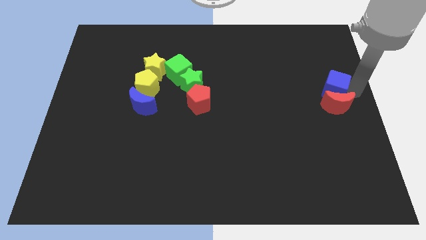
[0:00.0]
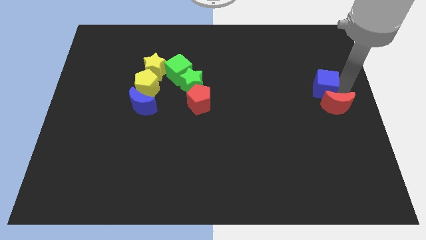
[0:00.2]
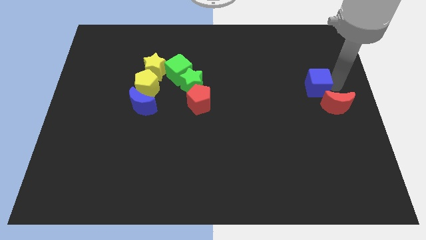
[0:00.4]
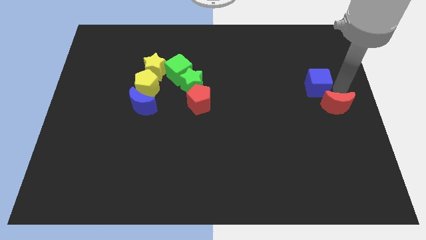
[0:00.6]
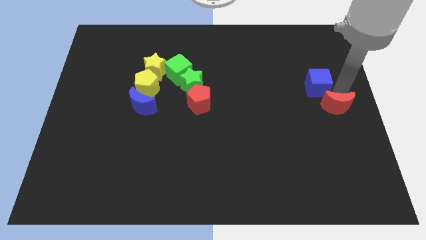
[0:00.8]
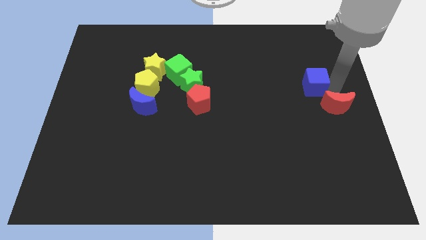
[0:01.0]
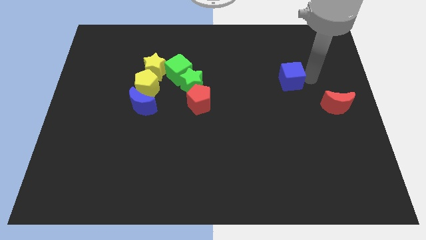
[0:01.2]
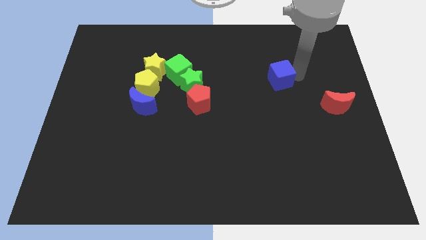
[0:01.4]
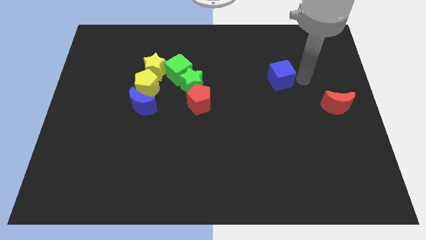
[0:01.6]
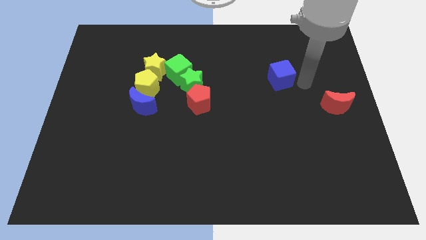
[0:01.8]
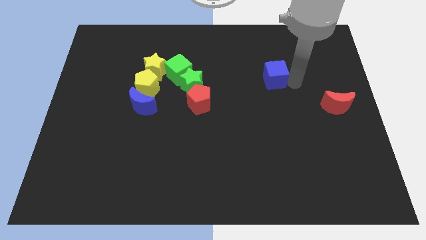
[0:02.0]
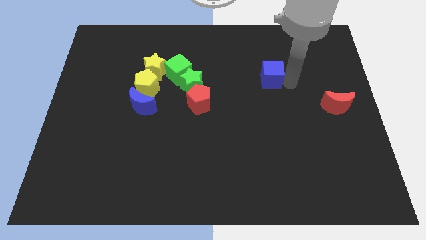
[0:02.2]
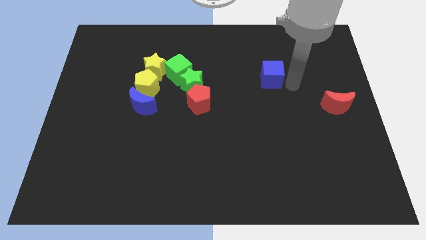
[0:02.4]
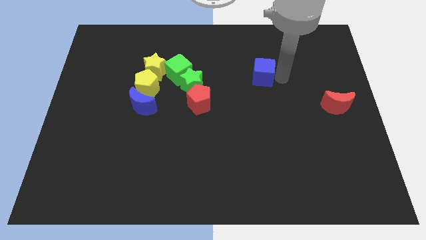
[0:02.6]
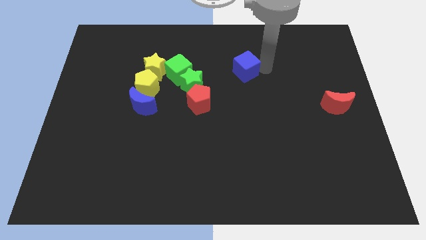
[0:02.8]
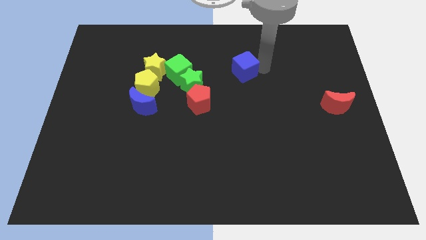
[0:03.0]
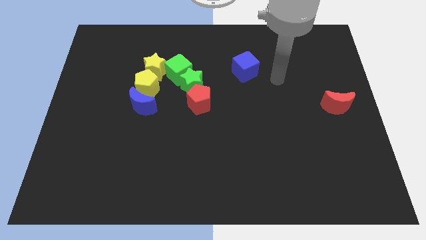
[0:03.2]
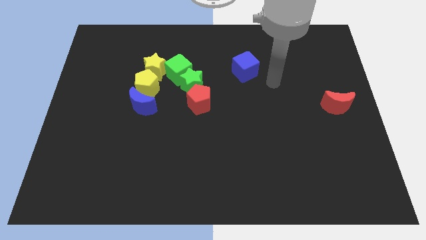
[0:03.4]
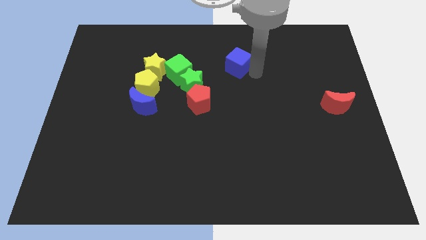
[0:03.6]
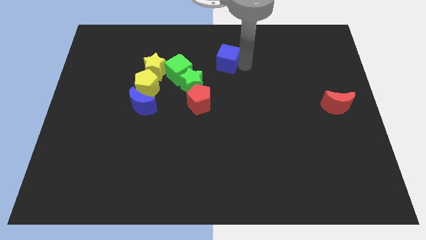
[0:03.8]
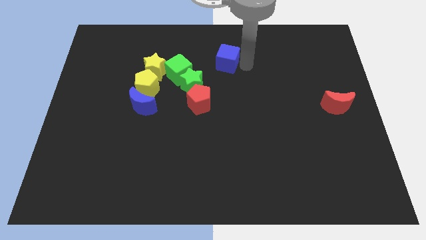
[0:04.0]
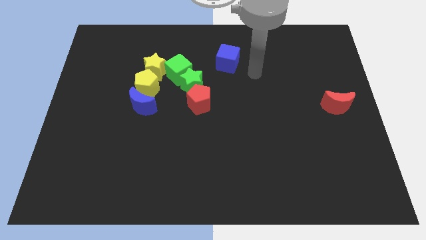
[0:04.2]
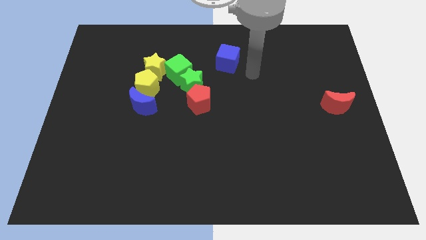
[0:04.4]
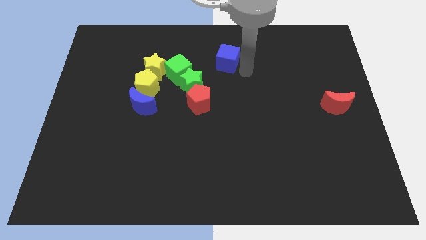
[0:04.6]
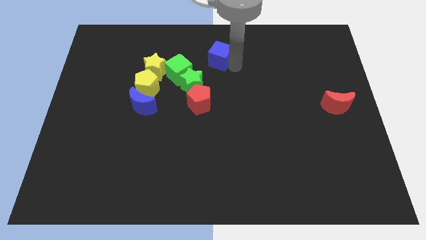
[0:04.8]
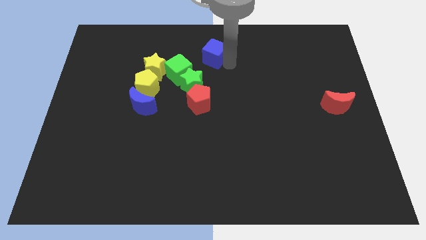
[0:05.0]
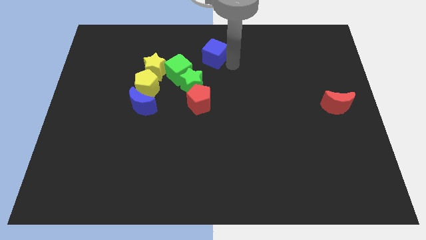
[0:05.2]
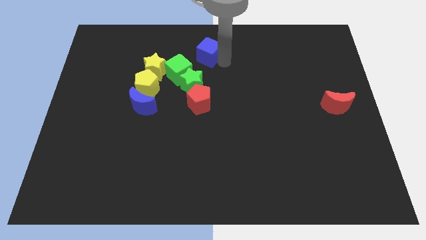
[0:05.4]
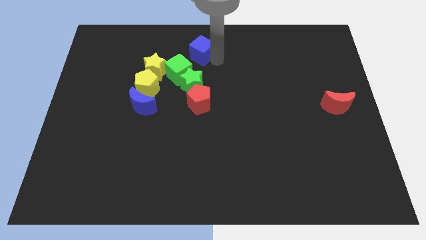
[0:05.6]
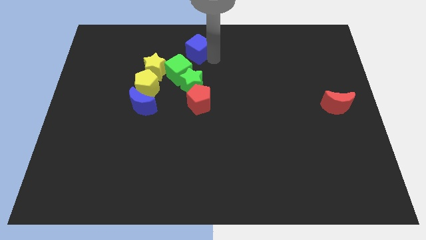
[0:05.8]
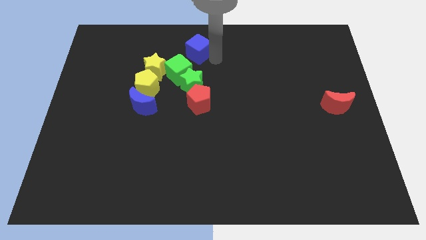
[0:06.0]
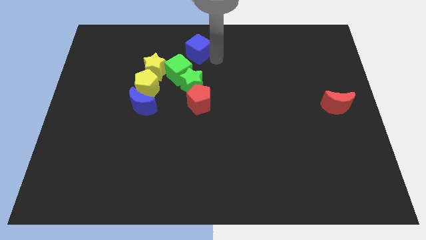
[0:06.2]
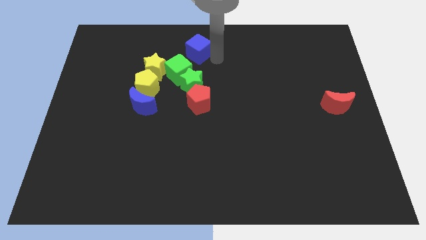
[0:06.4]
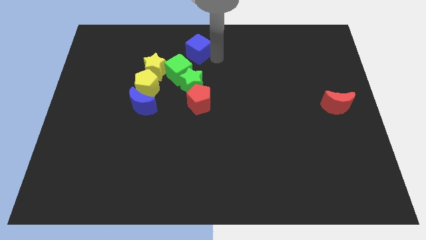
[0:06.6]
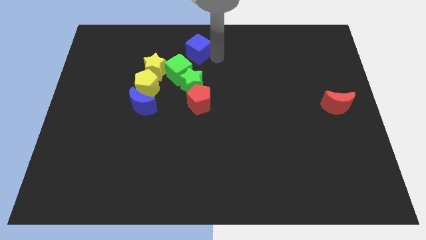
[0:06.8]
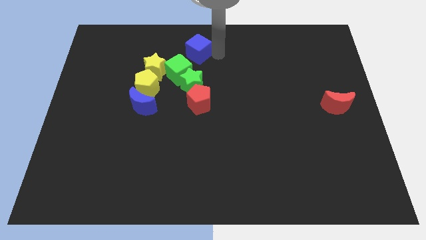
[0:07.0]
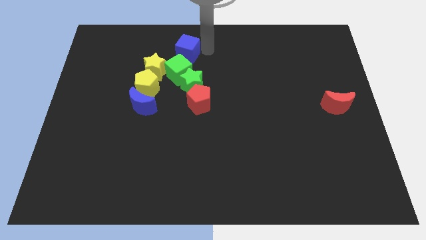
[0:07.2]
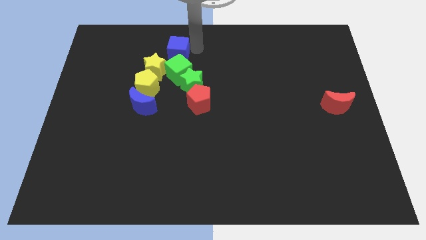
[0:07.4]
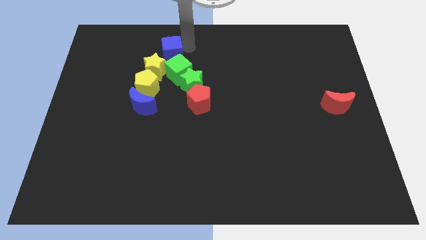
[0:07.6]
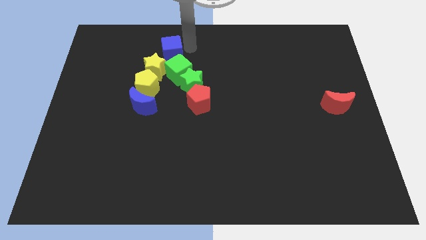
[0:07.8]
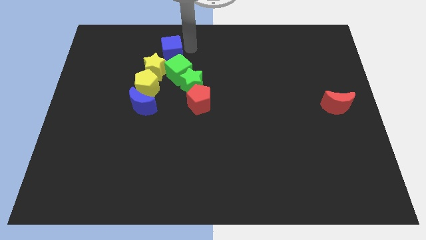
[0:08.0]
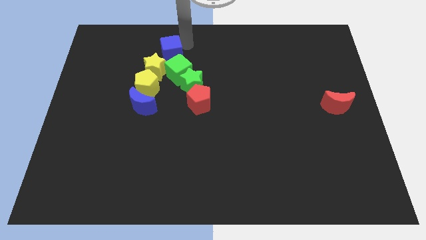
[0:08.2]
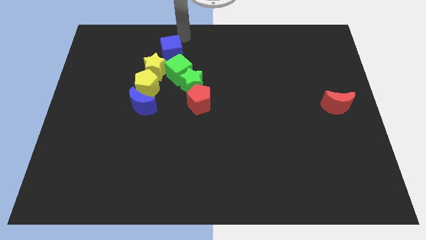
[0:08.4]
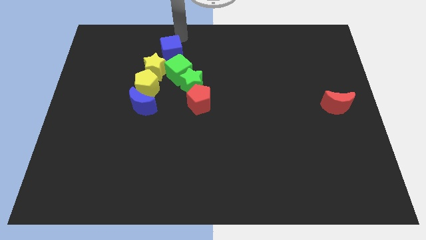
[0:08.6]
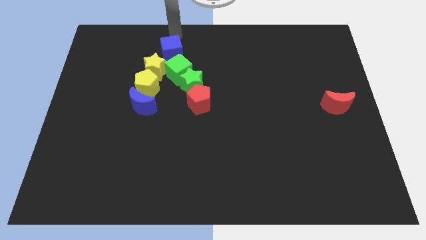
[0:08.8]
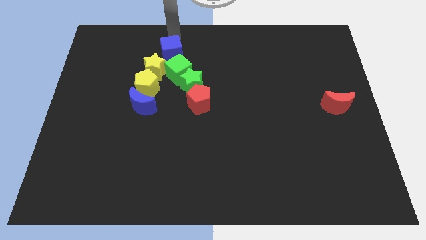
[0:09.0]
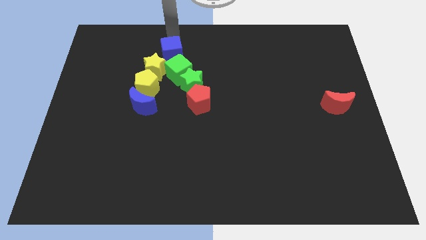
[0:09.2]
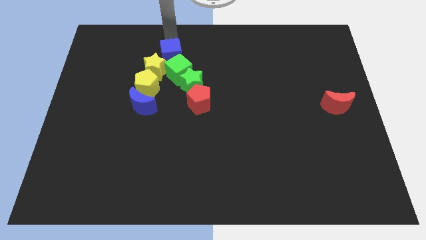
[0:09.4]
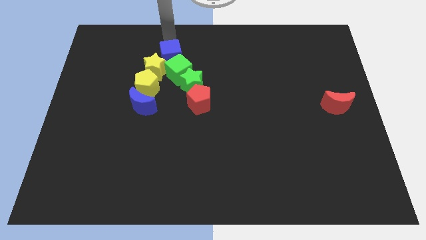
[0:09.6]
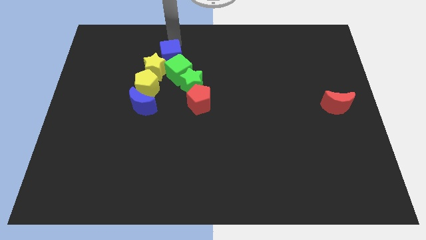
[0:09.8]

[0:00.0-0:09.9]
place the blue cube at the top side of the yellow star and the green cube

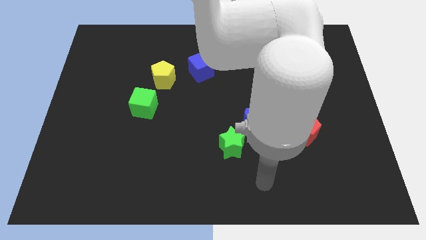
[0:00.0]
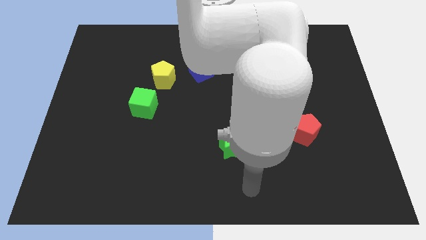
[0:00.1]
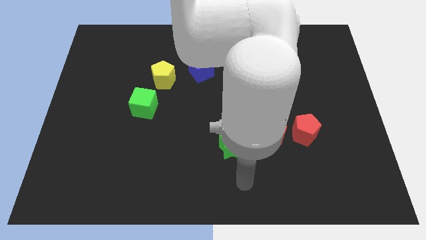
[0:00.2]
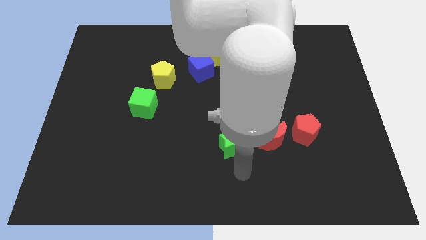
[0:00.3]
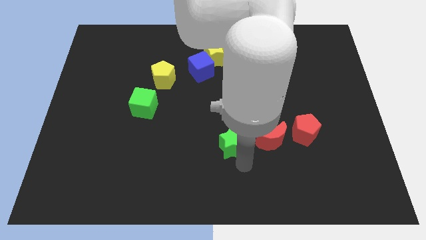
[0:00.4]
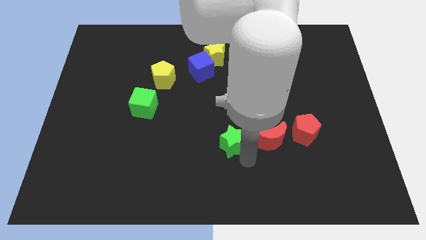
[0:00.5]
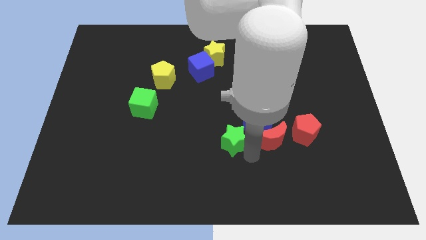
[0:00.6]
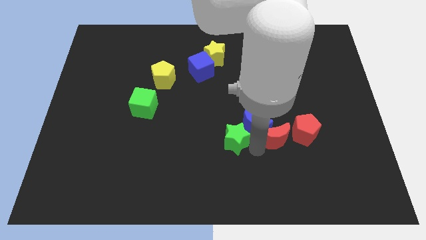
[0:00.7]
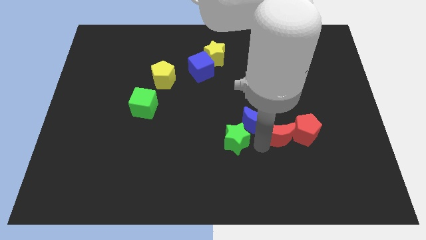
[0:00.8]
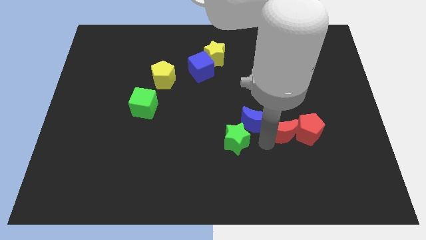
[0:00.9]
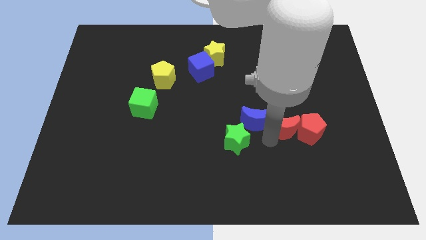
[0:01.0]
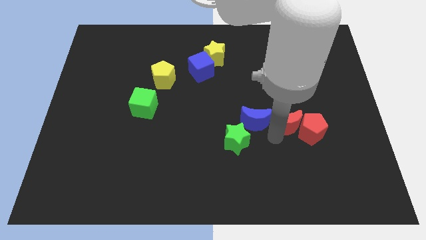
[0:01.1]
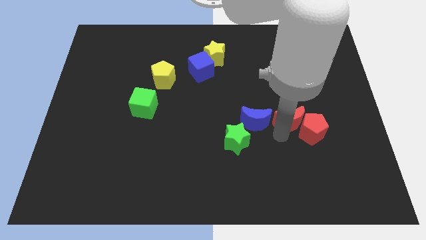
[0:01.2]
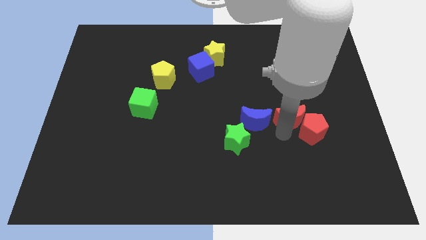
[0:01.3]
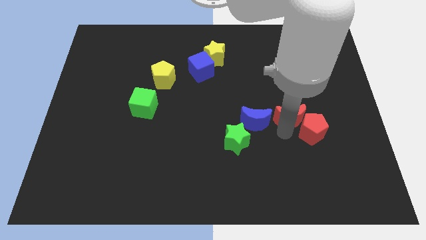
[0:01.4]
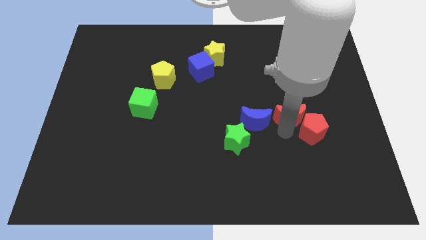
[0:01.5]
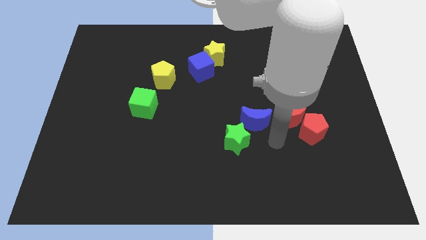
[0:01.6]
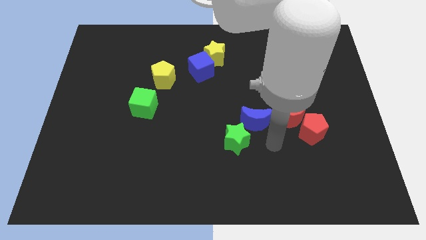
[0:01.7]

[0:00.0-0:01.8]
place red crescent close to red pentagon

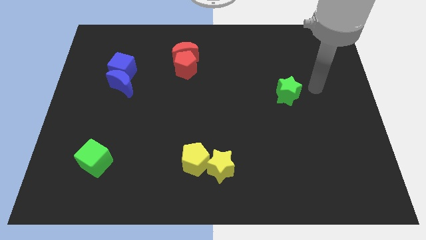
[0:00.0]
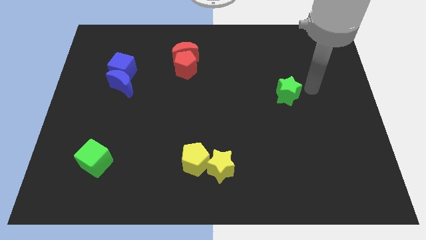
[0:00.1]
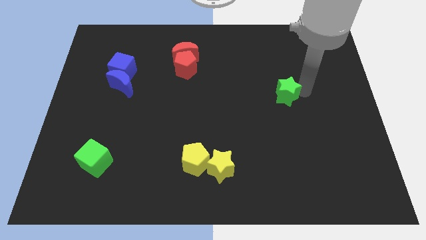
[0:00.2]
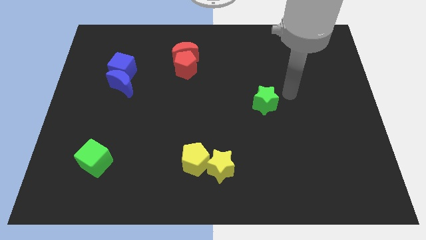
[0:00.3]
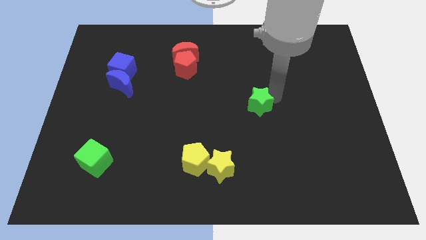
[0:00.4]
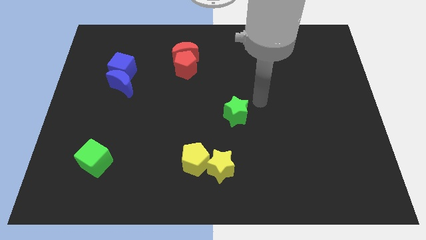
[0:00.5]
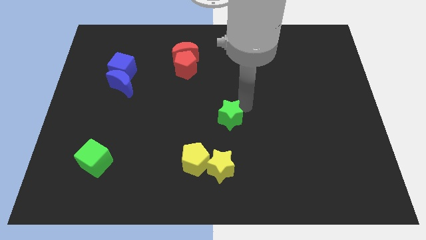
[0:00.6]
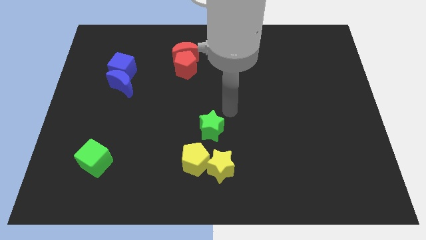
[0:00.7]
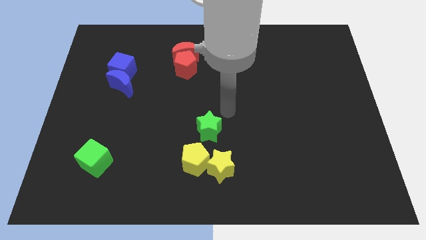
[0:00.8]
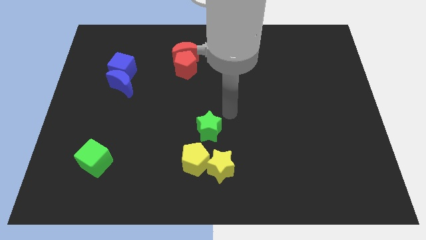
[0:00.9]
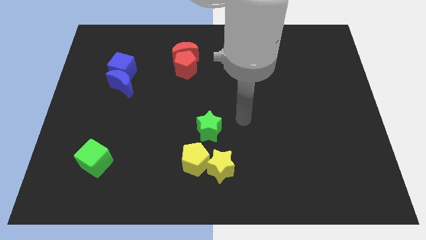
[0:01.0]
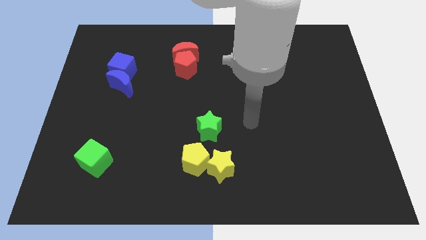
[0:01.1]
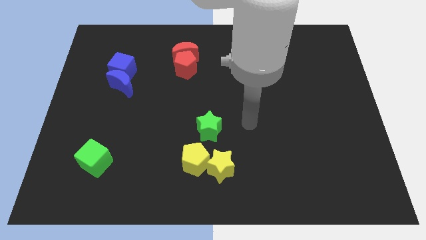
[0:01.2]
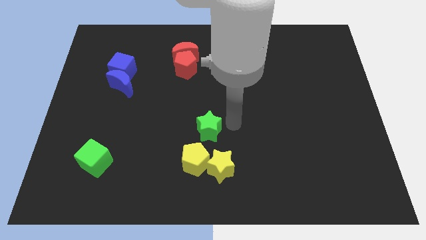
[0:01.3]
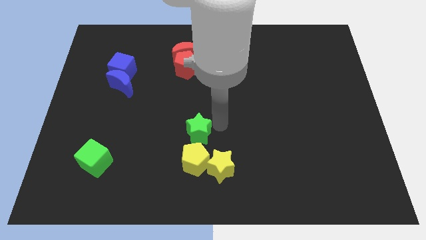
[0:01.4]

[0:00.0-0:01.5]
put the green star at the top of yellow pentagon

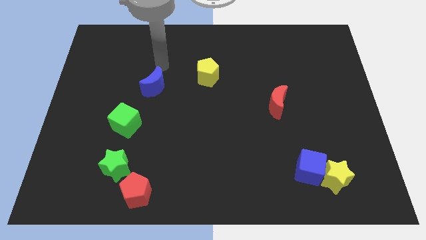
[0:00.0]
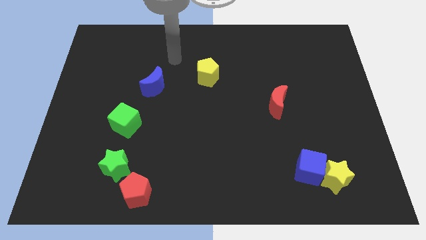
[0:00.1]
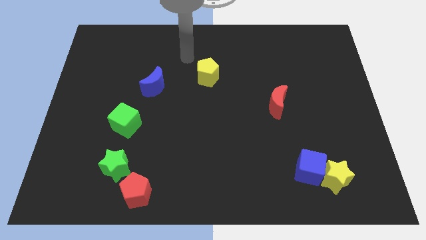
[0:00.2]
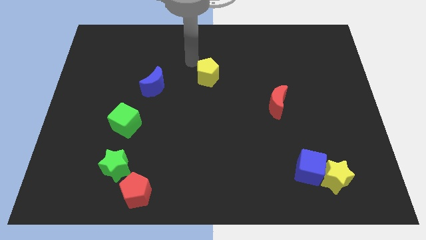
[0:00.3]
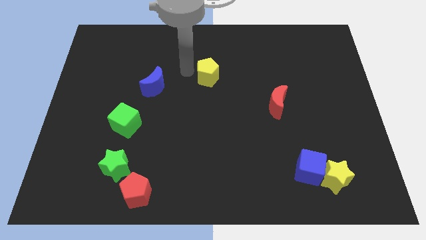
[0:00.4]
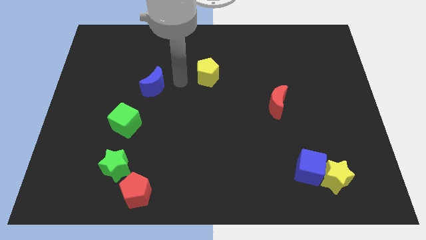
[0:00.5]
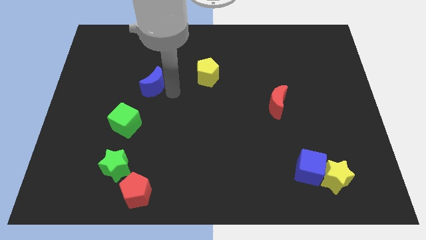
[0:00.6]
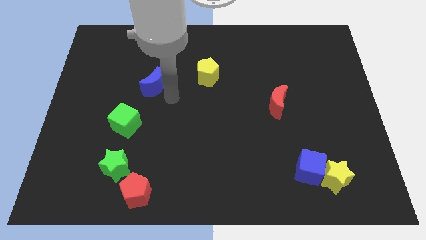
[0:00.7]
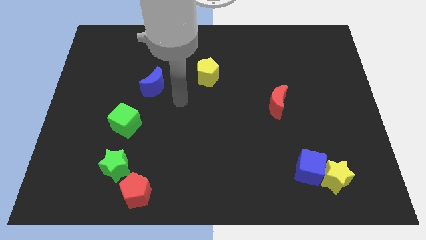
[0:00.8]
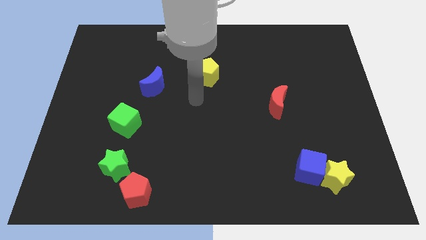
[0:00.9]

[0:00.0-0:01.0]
move your arm away from the blue moon
